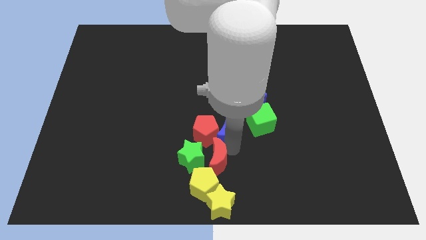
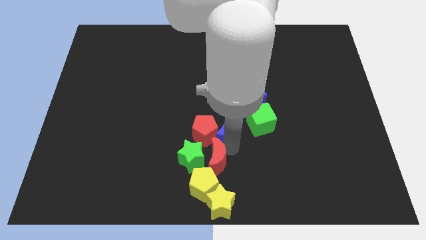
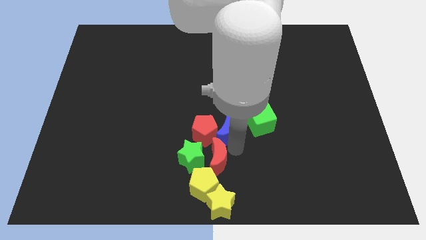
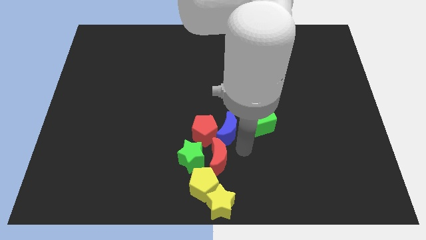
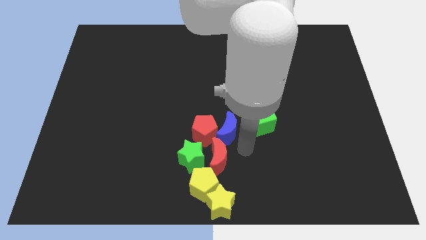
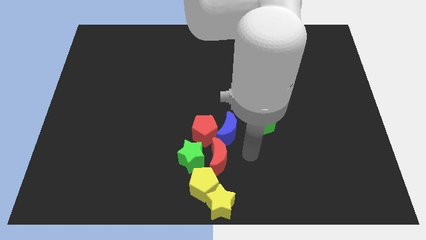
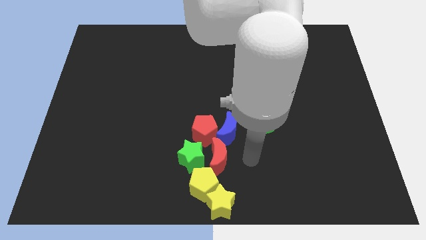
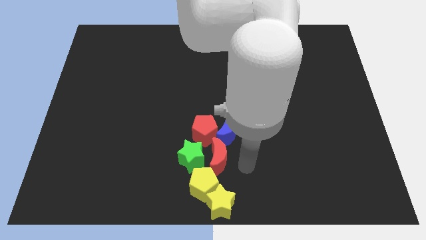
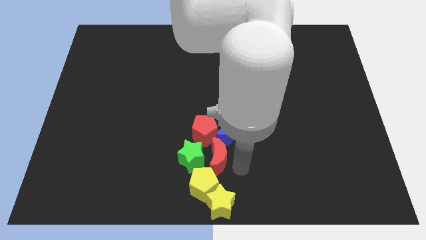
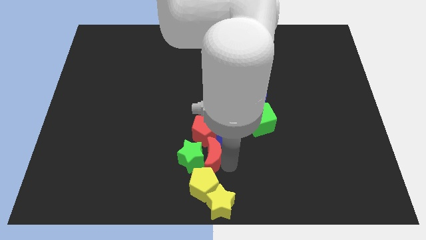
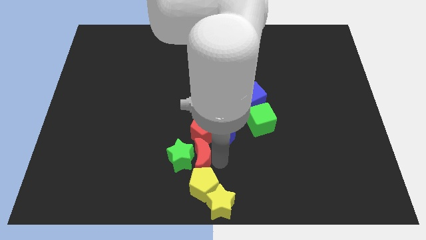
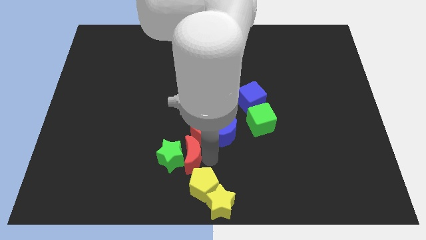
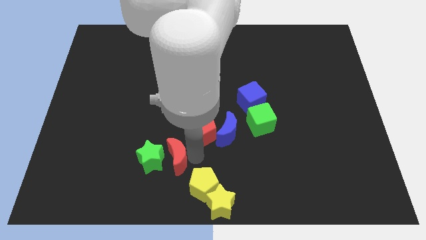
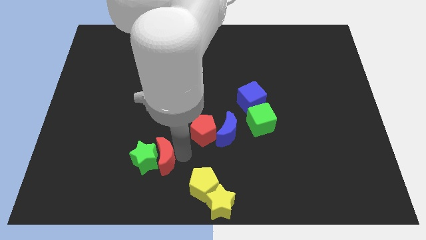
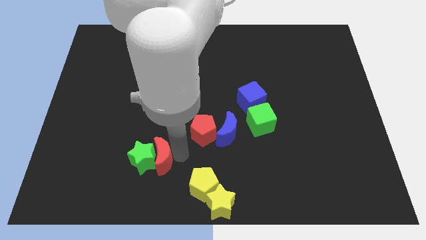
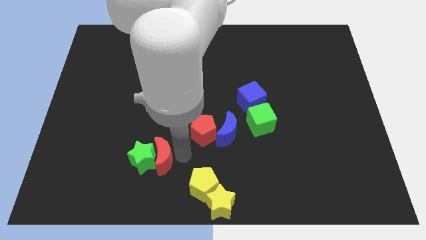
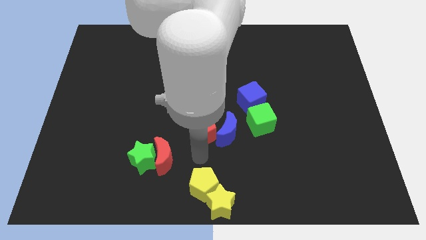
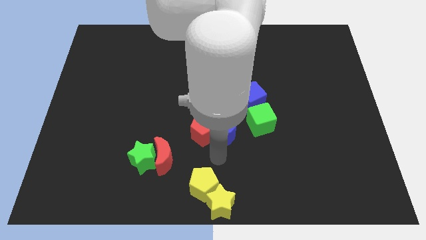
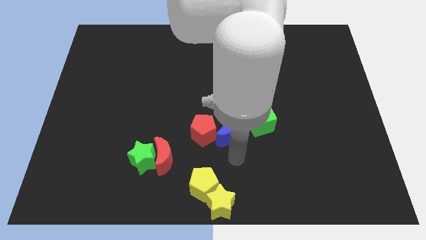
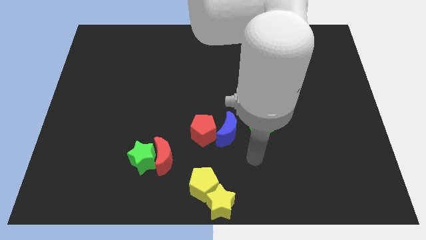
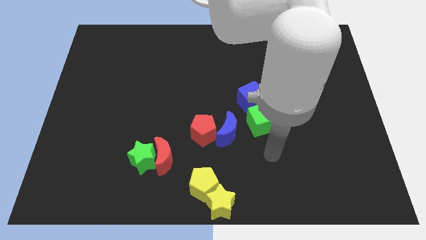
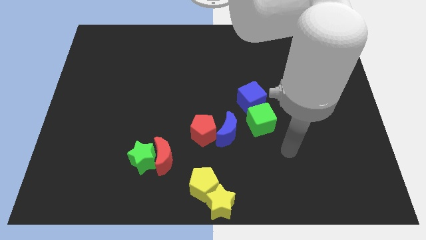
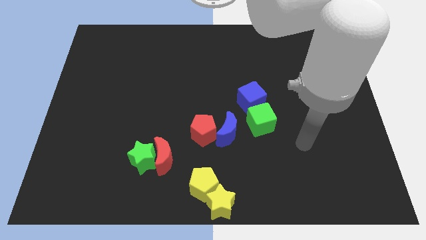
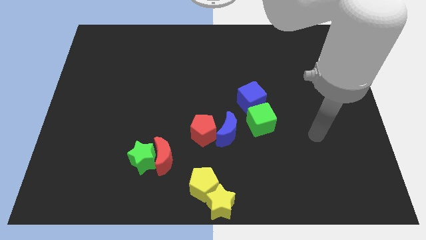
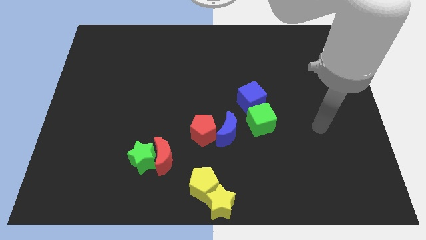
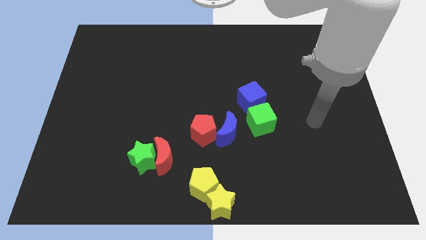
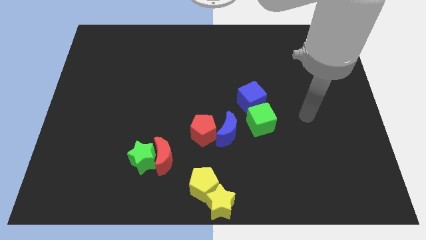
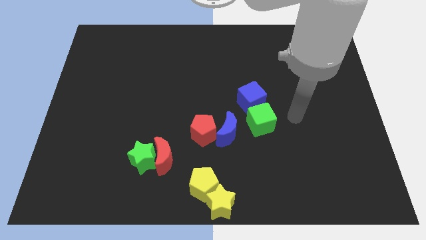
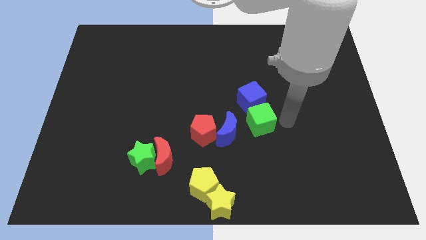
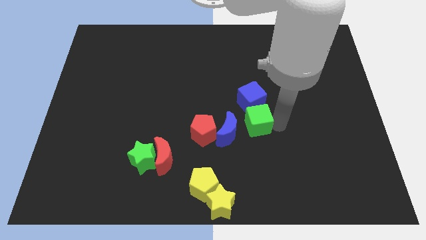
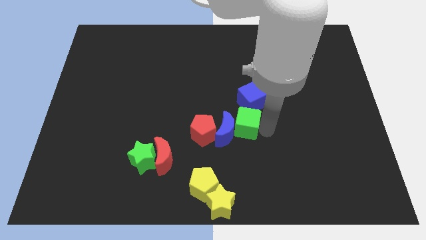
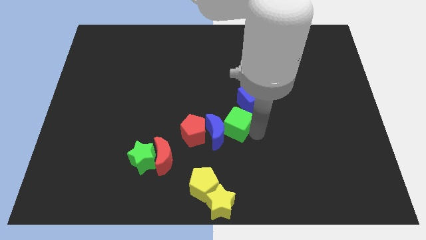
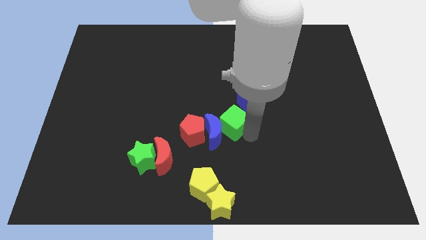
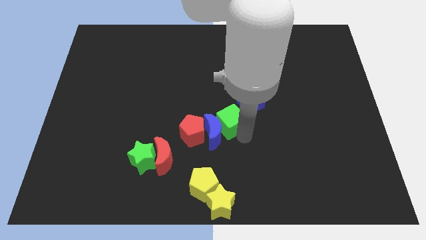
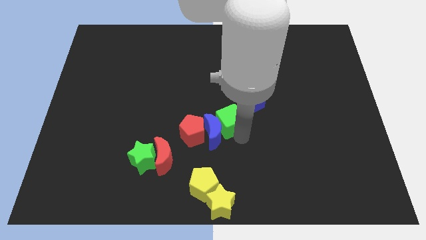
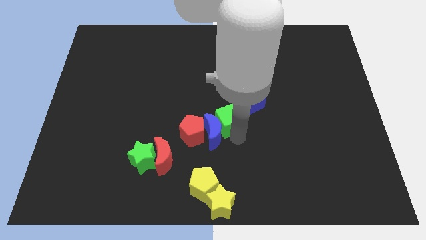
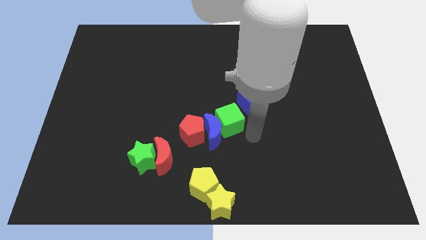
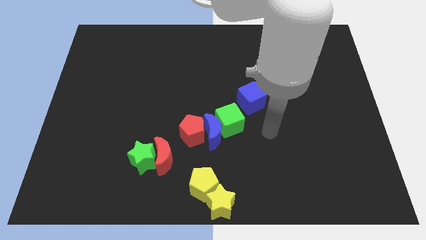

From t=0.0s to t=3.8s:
place the red crescent left to the green star

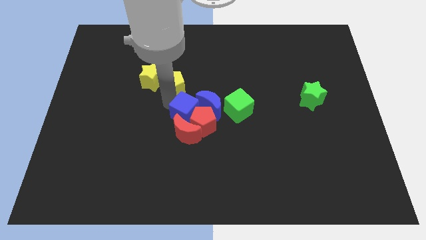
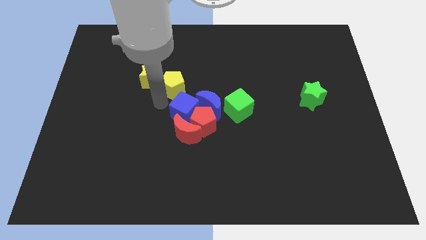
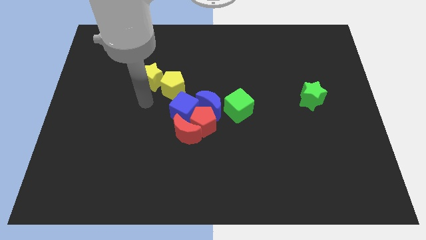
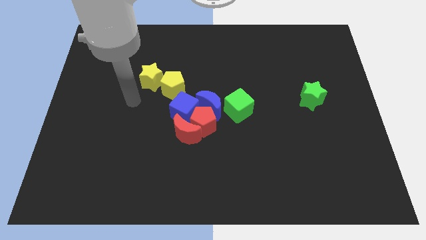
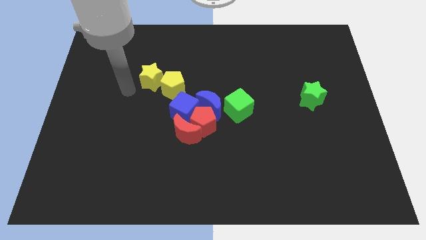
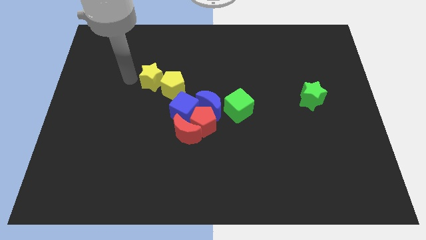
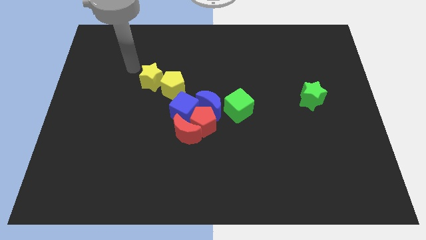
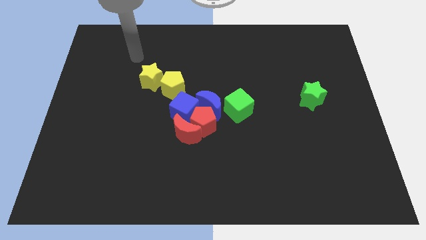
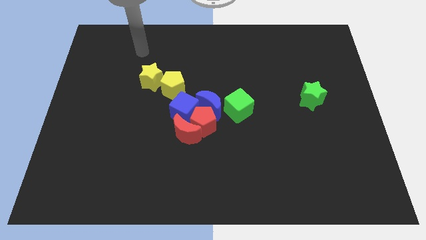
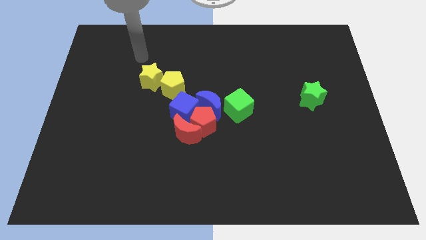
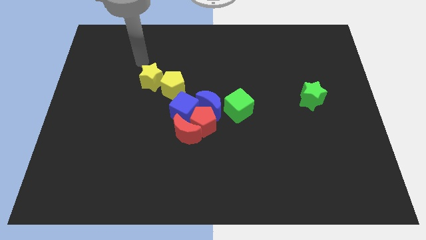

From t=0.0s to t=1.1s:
place the arm above the yellow star

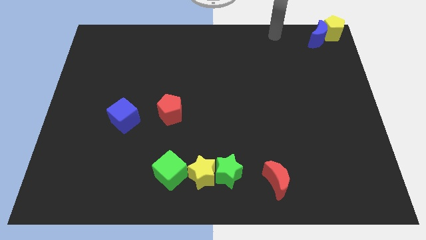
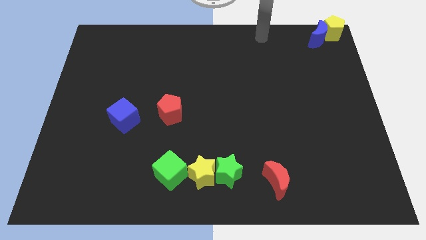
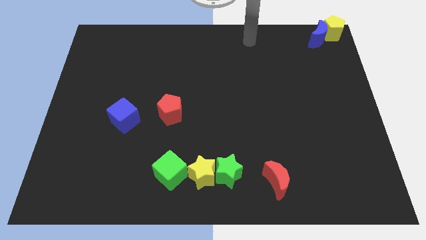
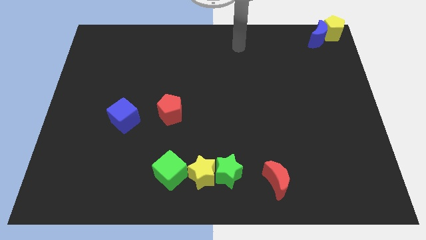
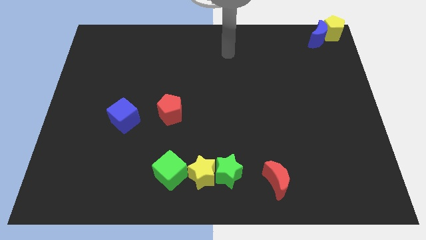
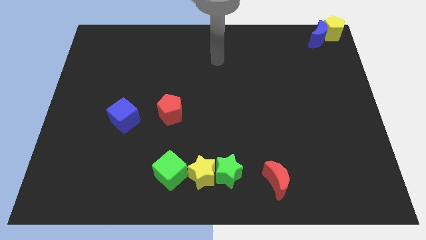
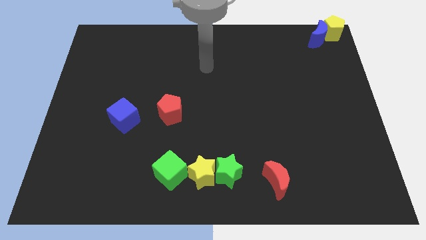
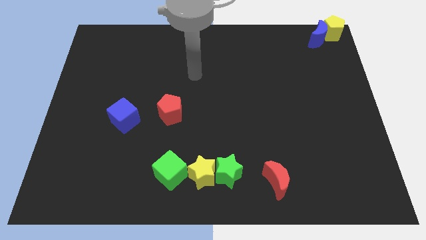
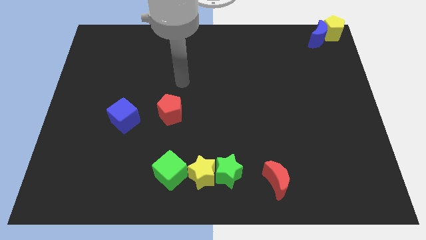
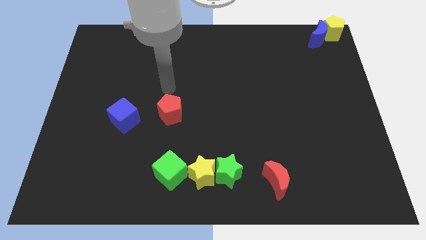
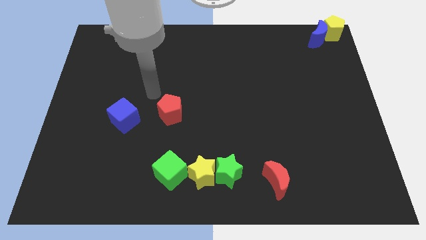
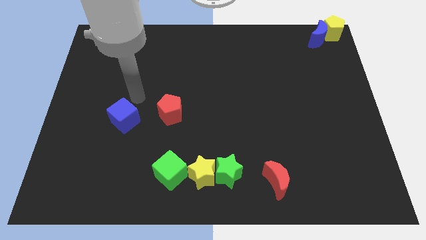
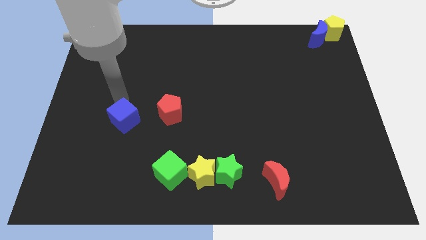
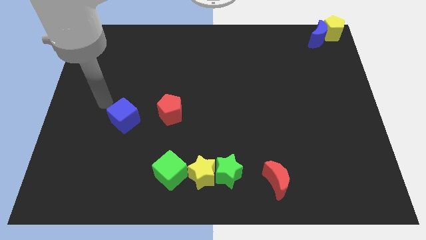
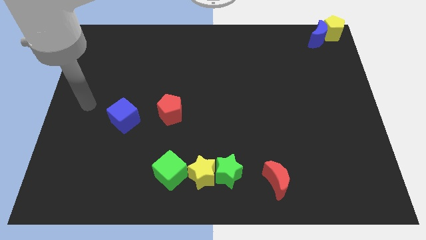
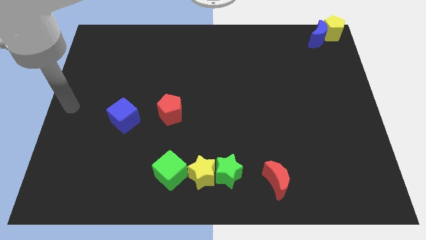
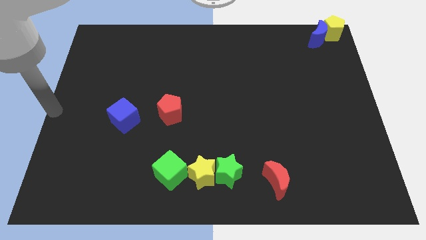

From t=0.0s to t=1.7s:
point the arm to the left center of the board

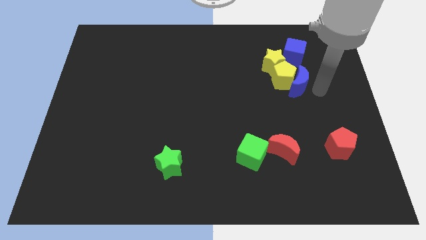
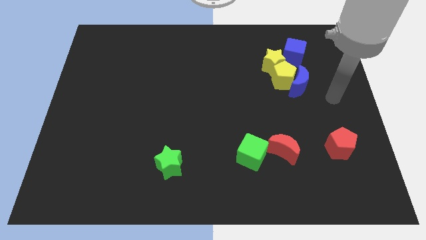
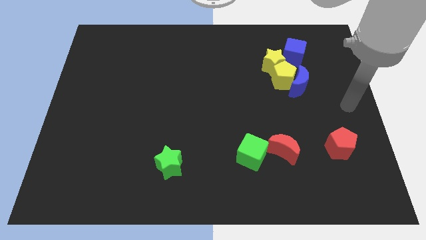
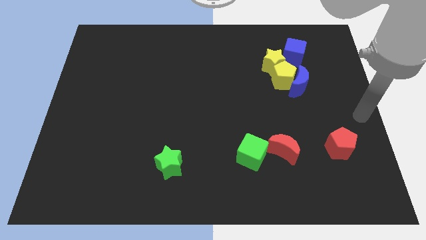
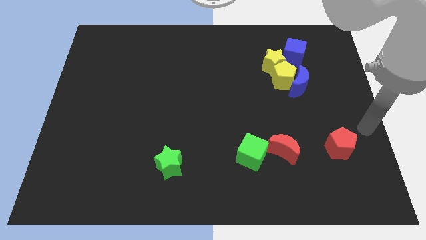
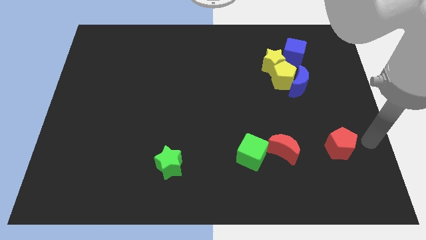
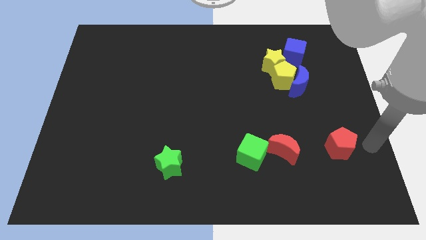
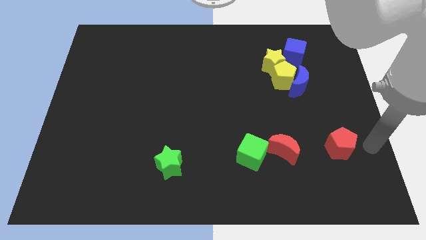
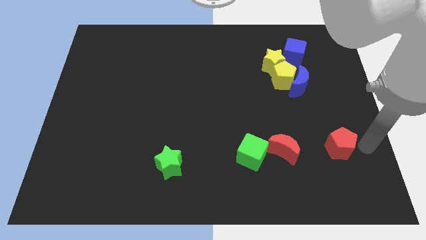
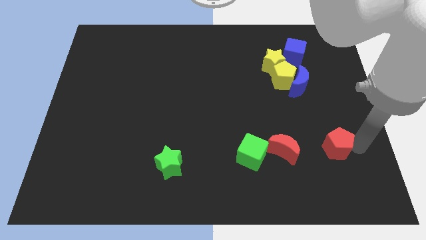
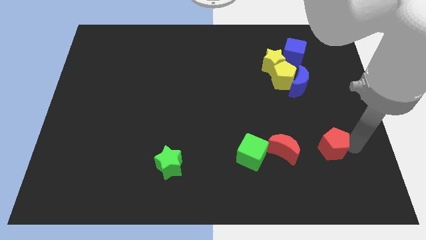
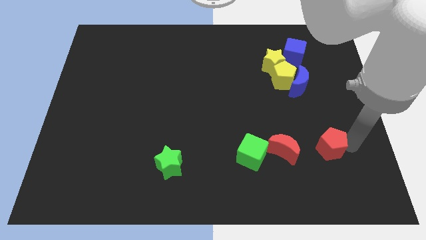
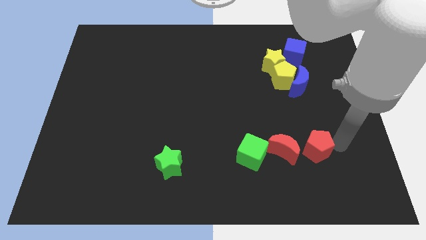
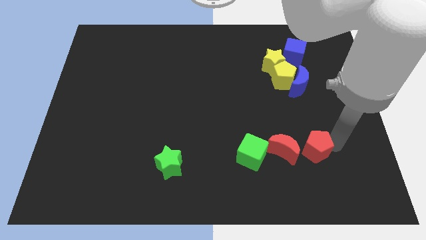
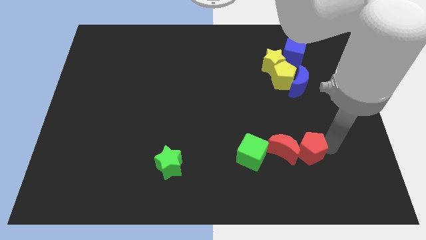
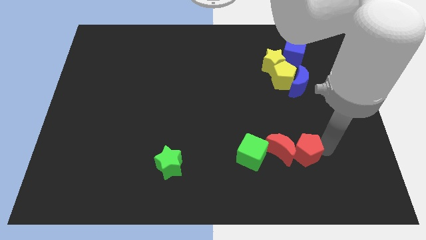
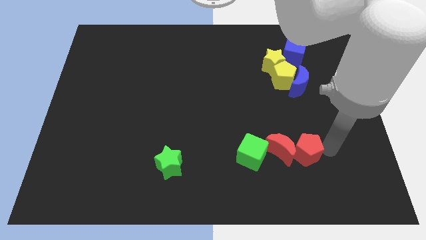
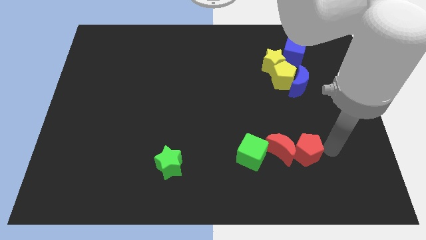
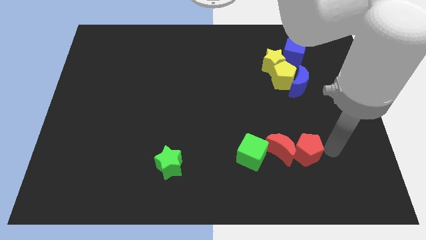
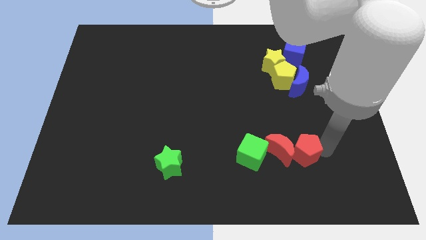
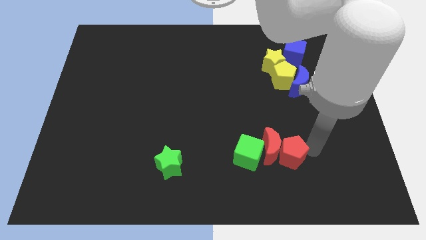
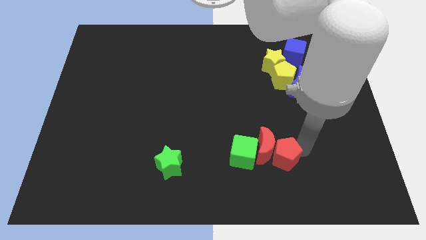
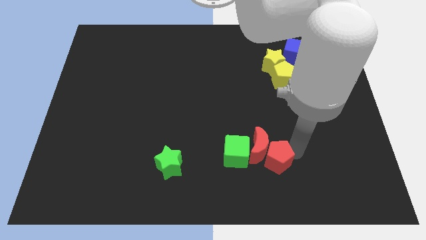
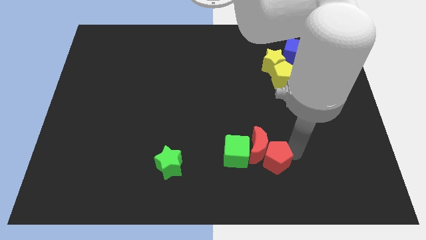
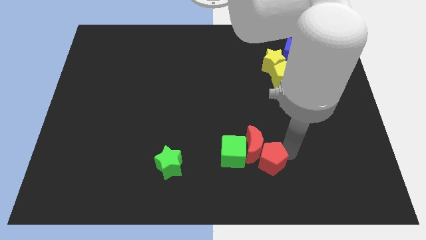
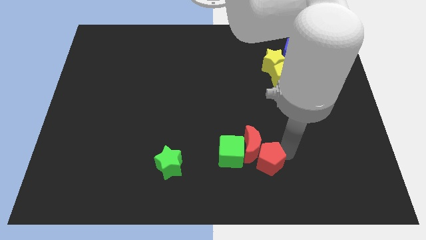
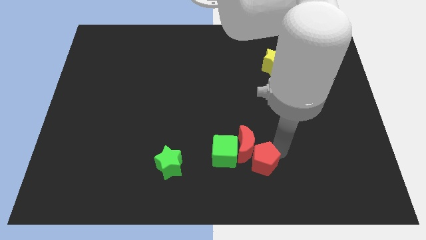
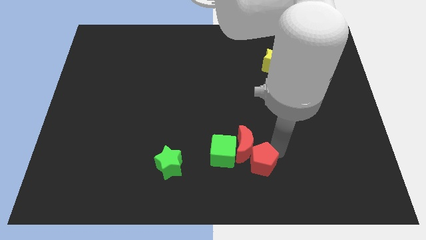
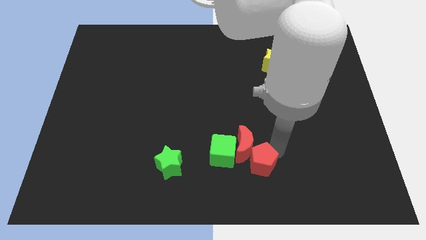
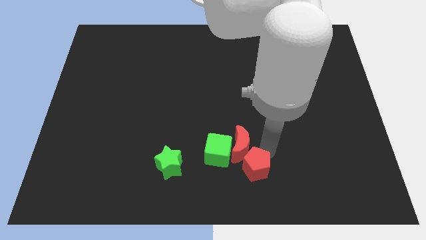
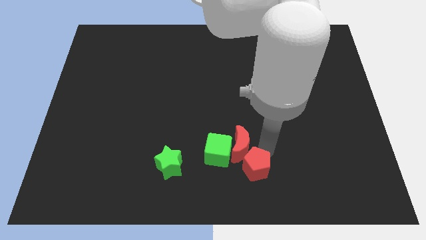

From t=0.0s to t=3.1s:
move the red pentagon towards the red crescent
